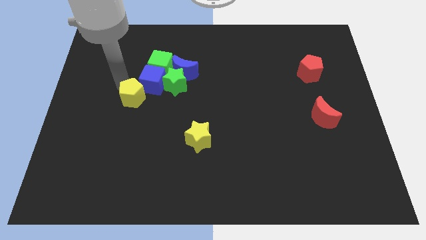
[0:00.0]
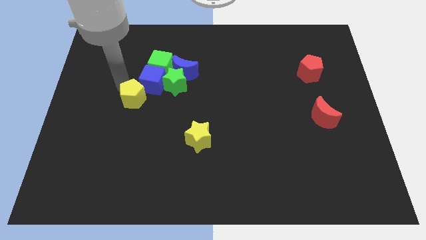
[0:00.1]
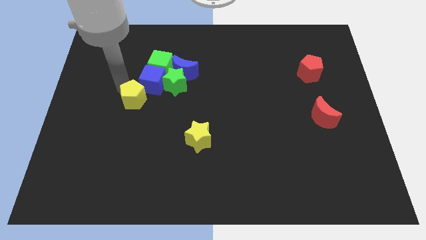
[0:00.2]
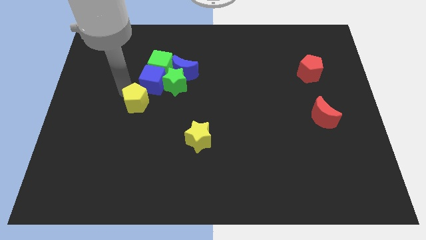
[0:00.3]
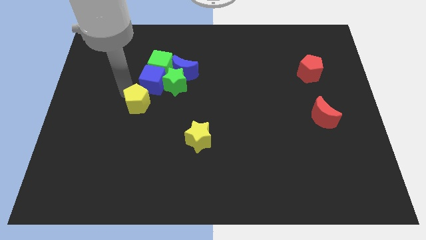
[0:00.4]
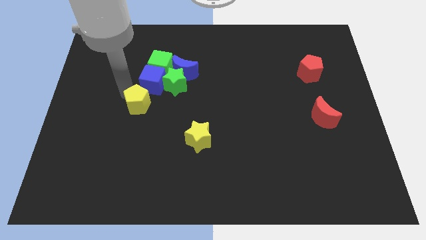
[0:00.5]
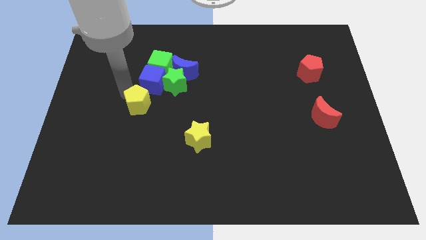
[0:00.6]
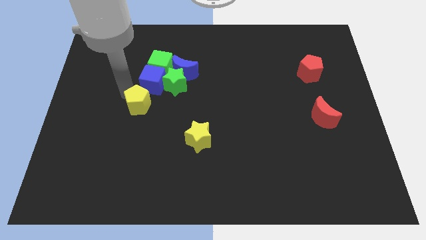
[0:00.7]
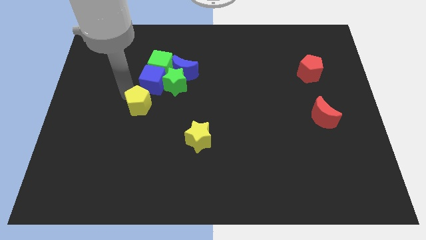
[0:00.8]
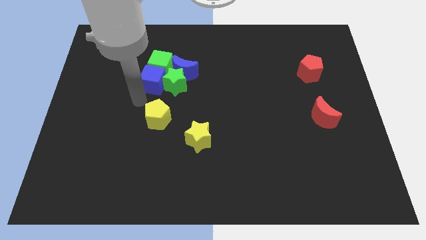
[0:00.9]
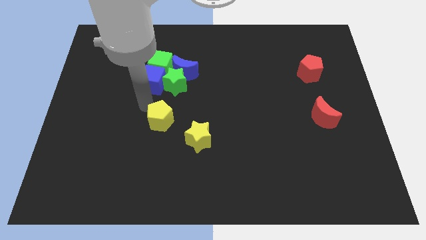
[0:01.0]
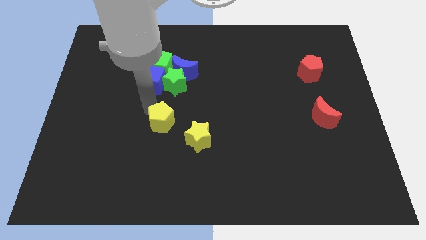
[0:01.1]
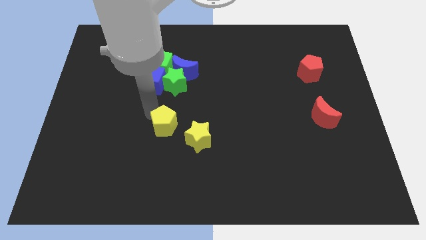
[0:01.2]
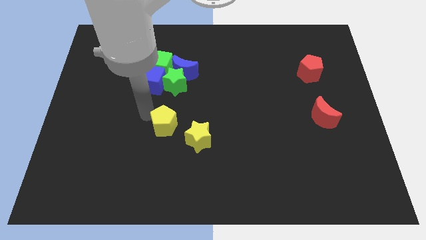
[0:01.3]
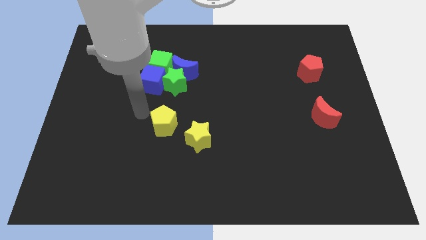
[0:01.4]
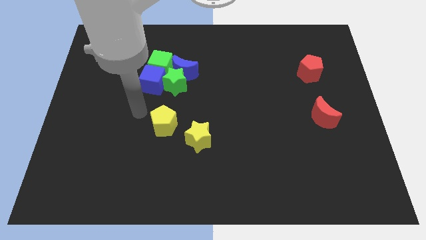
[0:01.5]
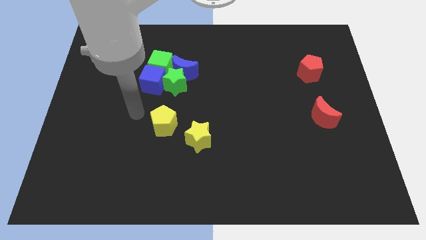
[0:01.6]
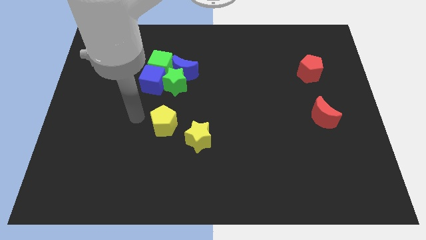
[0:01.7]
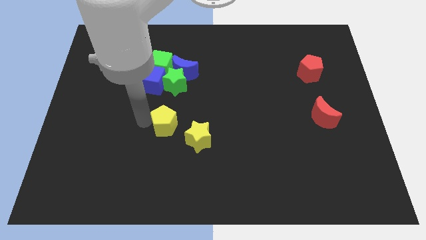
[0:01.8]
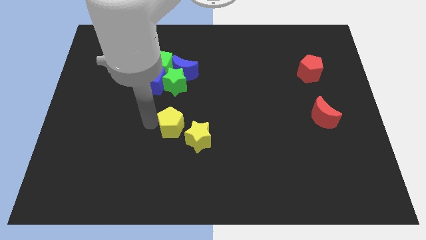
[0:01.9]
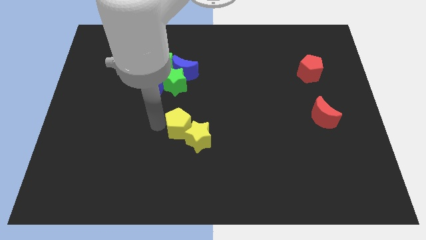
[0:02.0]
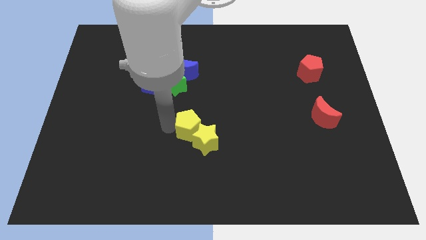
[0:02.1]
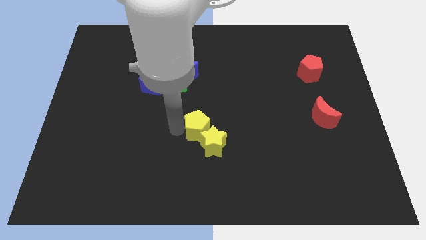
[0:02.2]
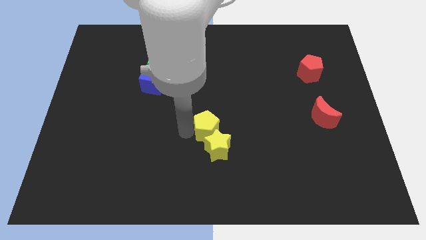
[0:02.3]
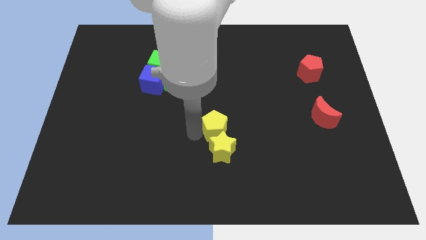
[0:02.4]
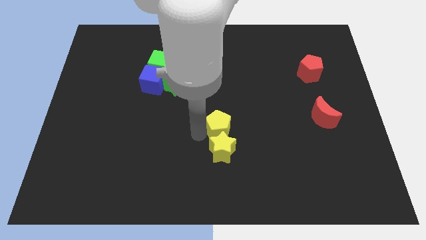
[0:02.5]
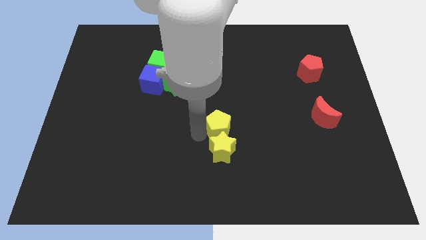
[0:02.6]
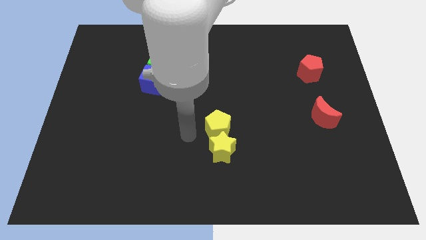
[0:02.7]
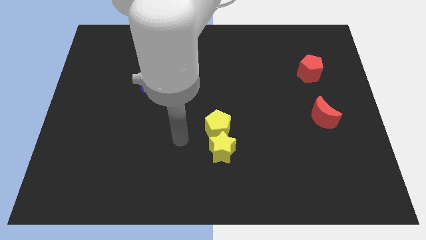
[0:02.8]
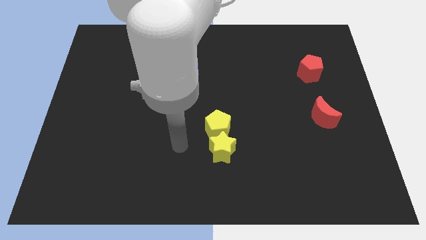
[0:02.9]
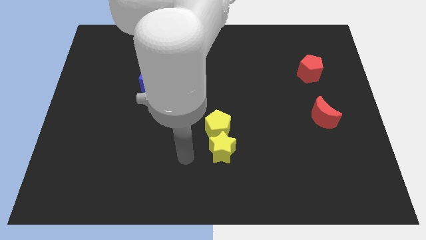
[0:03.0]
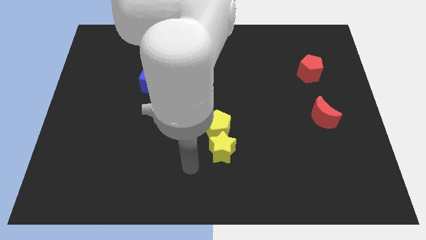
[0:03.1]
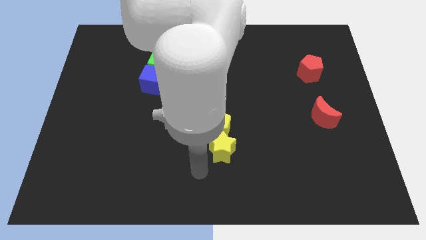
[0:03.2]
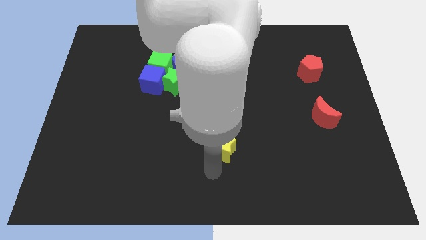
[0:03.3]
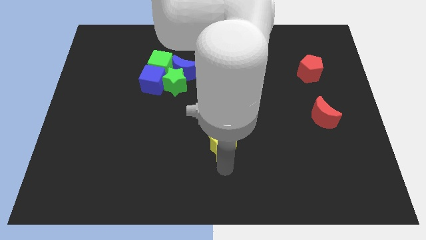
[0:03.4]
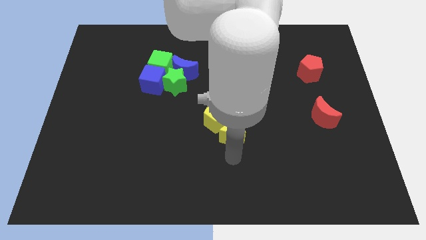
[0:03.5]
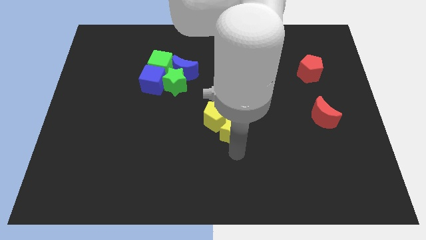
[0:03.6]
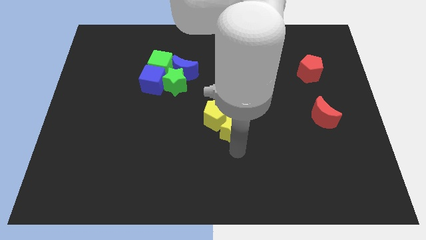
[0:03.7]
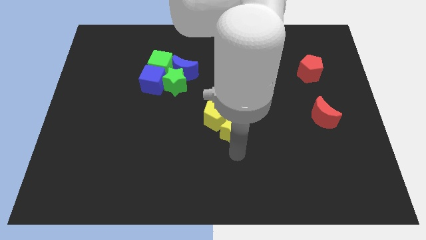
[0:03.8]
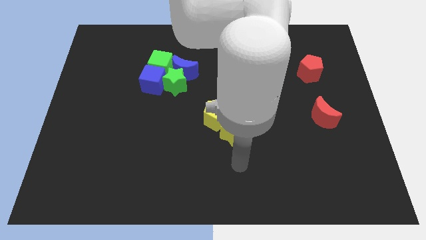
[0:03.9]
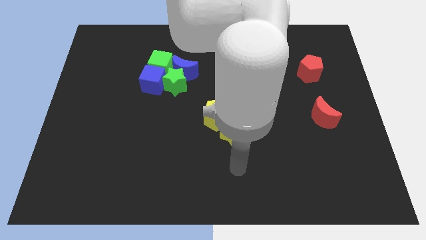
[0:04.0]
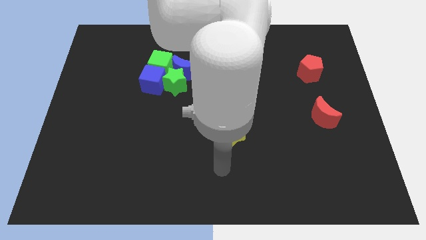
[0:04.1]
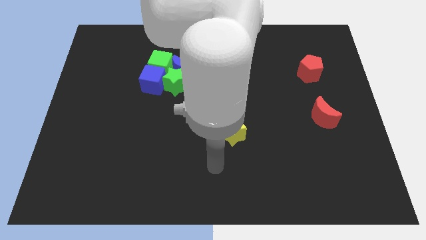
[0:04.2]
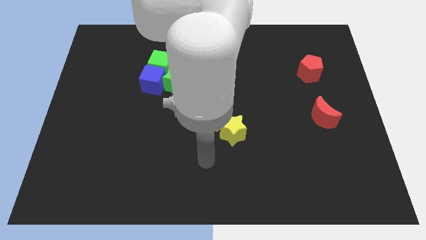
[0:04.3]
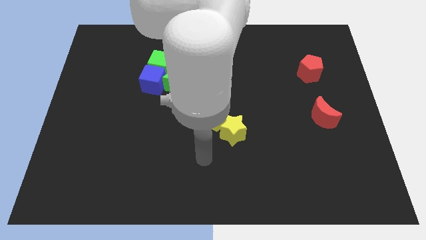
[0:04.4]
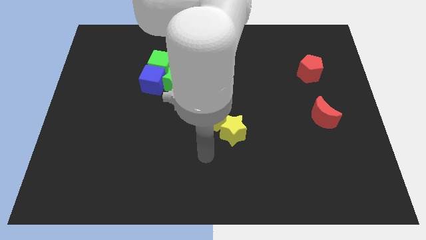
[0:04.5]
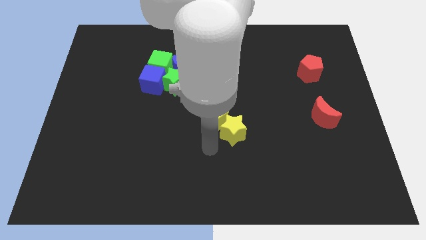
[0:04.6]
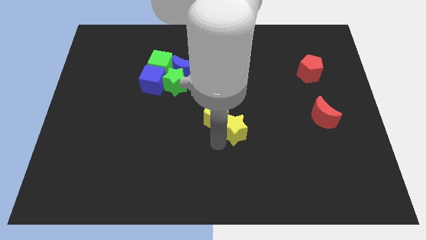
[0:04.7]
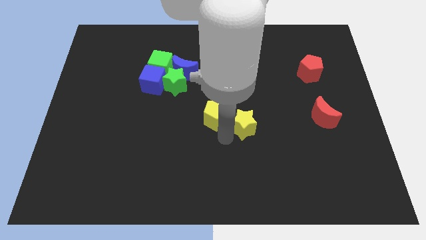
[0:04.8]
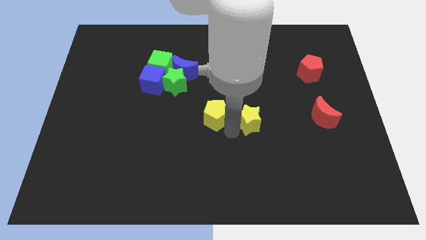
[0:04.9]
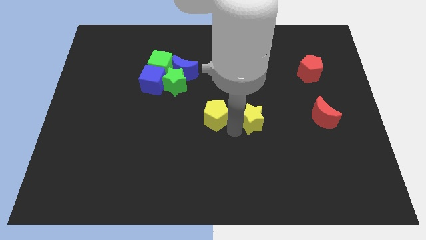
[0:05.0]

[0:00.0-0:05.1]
place the yellow star to the right of the yellow pentagon

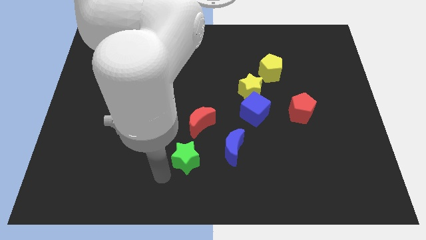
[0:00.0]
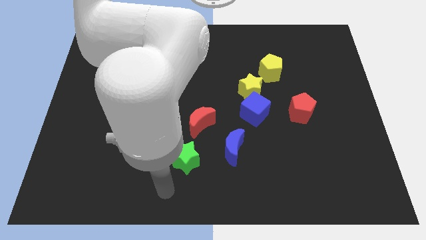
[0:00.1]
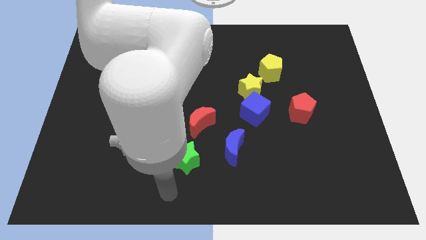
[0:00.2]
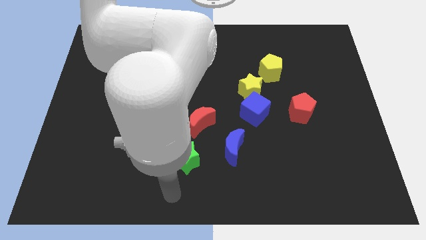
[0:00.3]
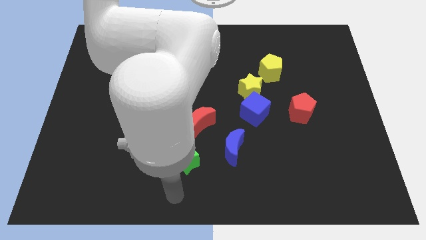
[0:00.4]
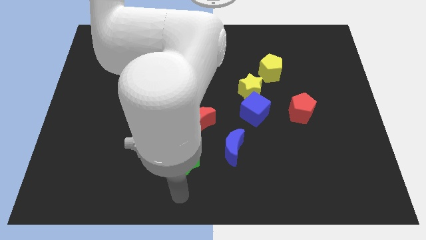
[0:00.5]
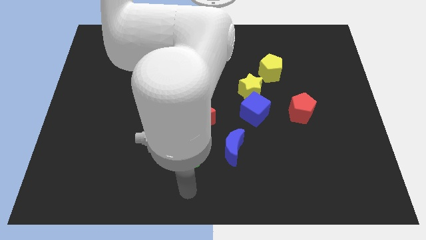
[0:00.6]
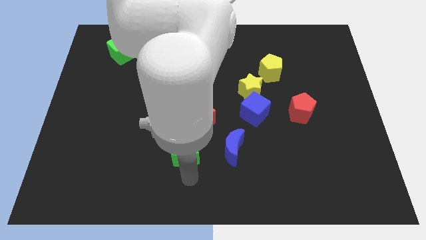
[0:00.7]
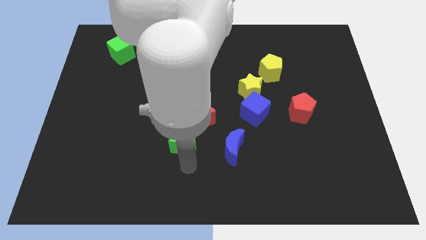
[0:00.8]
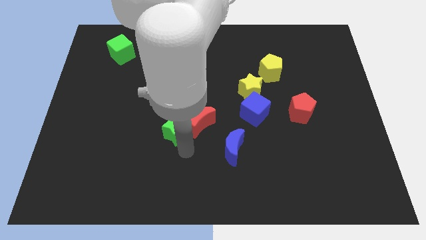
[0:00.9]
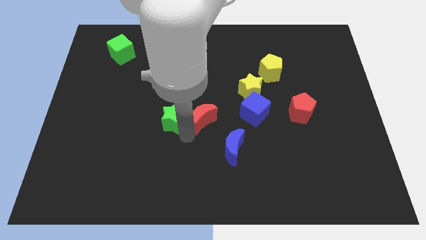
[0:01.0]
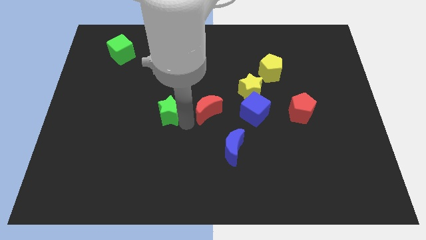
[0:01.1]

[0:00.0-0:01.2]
move the green star to the left side of the red moon

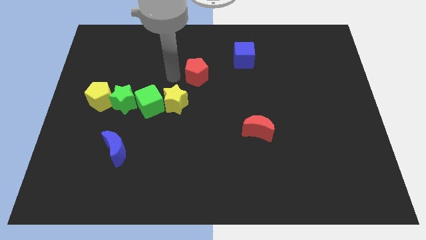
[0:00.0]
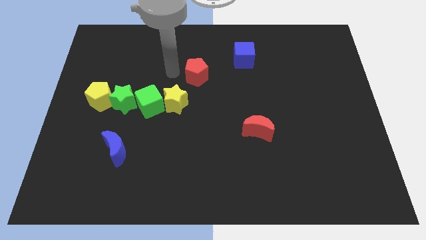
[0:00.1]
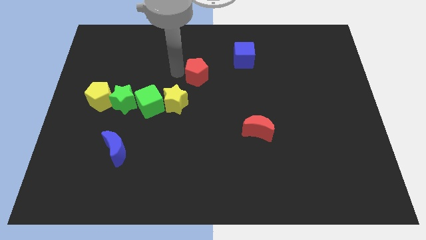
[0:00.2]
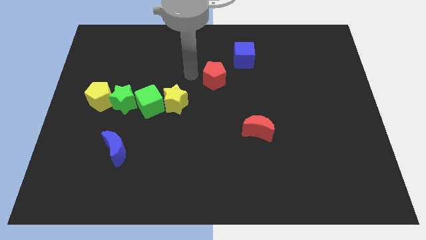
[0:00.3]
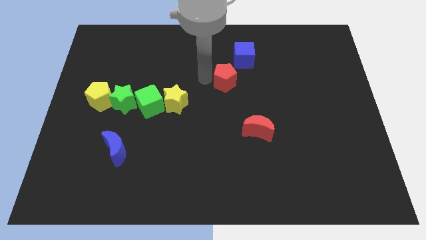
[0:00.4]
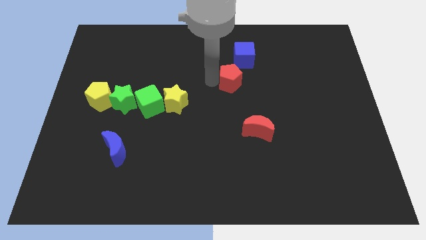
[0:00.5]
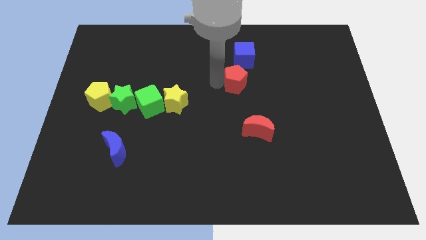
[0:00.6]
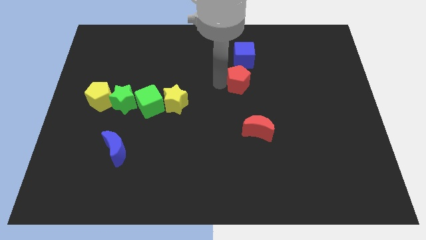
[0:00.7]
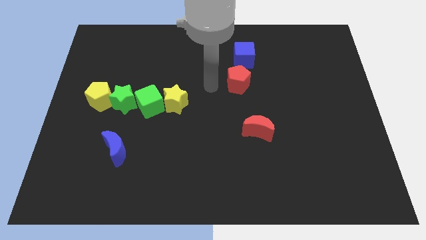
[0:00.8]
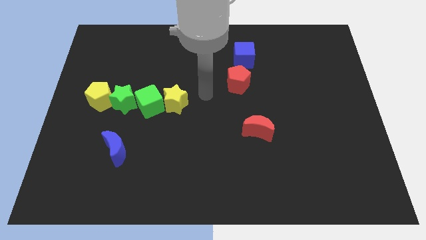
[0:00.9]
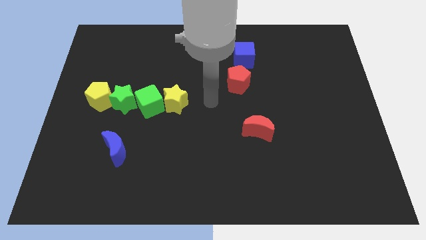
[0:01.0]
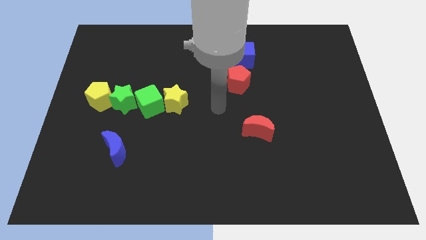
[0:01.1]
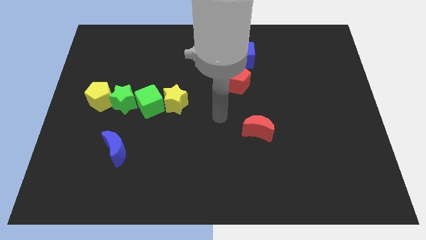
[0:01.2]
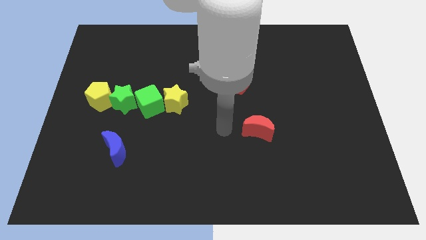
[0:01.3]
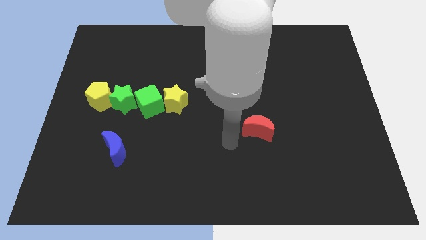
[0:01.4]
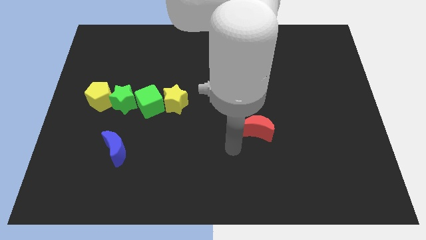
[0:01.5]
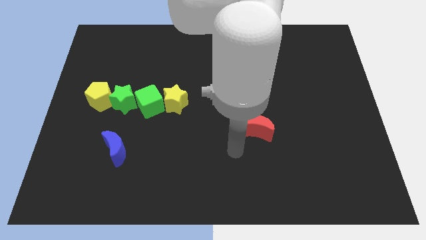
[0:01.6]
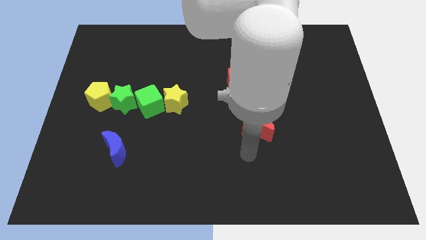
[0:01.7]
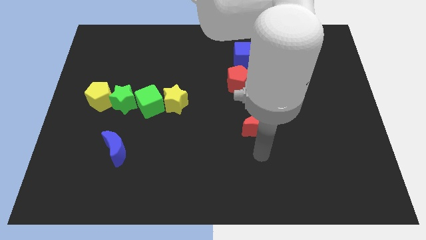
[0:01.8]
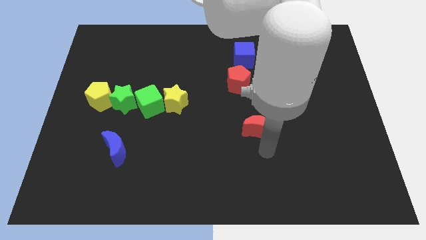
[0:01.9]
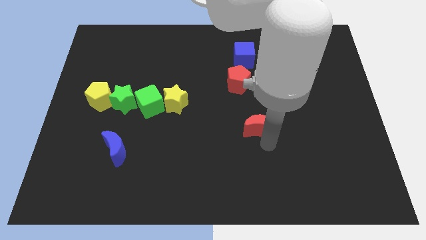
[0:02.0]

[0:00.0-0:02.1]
move red pentagon below the blue cube

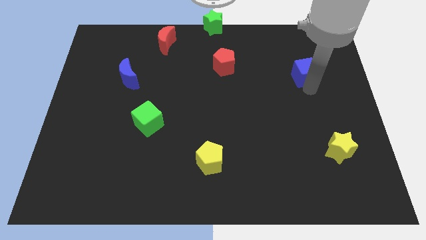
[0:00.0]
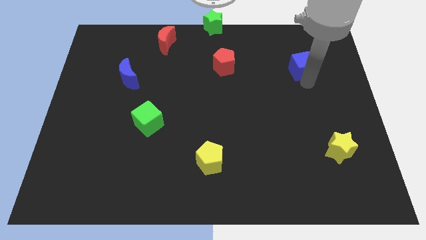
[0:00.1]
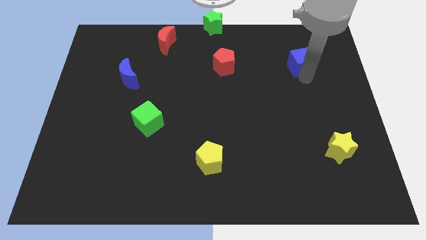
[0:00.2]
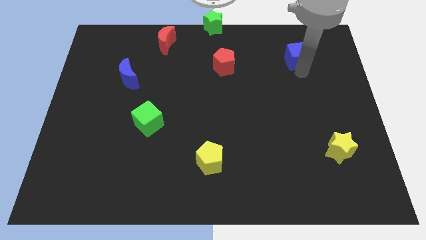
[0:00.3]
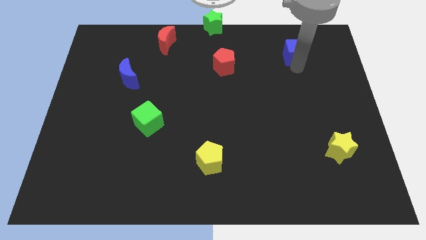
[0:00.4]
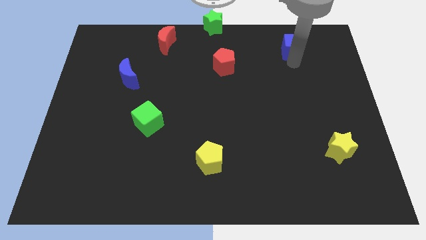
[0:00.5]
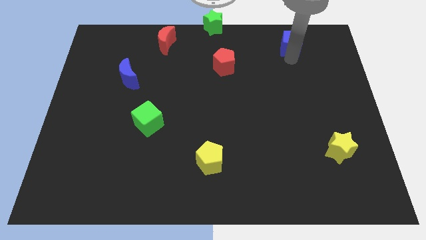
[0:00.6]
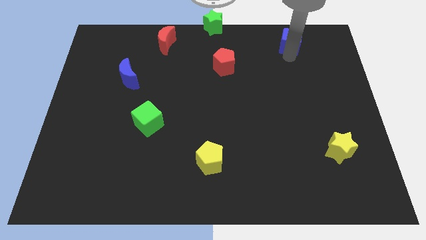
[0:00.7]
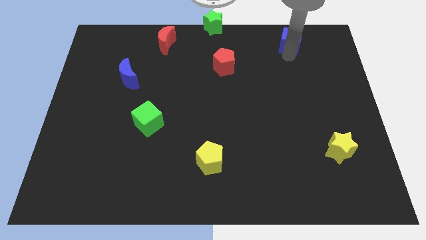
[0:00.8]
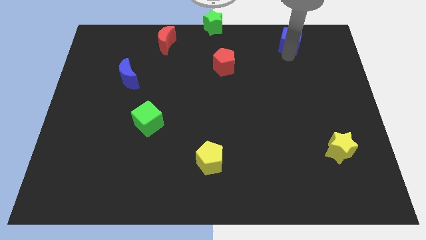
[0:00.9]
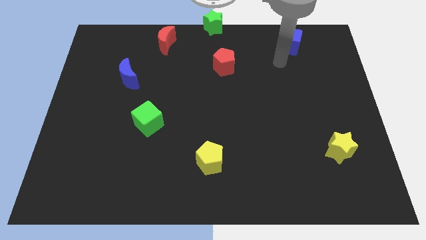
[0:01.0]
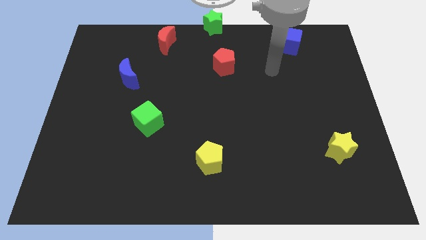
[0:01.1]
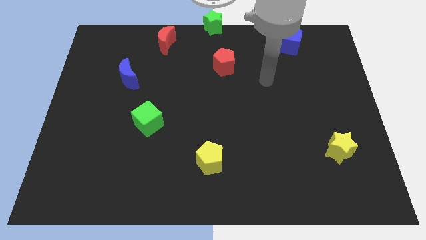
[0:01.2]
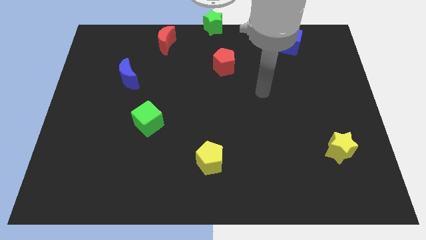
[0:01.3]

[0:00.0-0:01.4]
push the blue cube diagonally top right to the red pentagon
